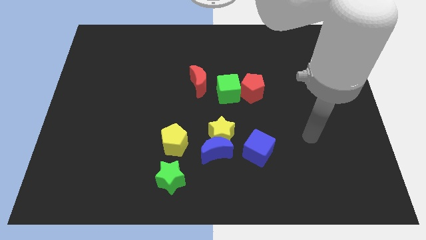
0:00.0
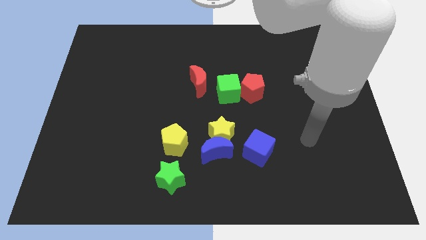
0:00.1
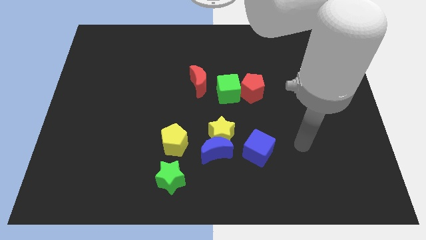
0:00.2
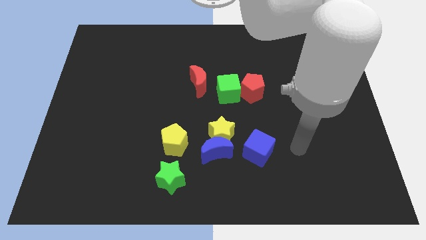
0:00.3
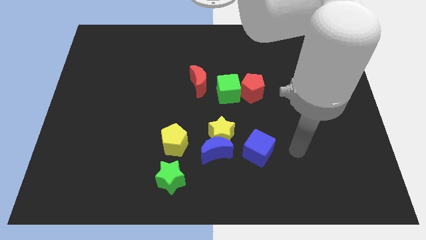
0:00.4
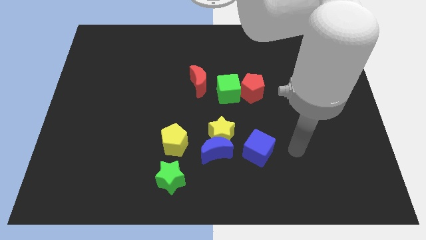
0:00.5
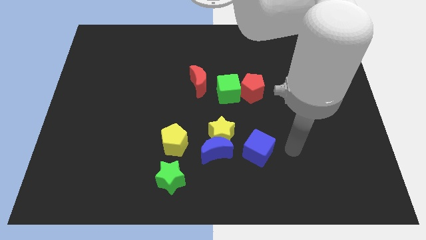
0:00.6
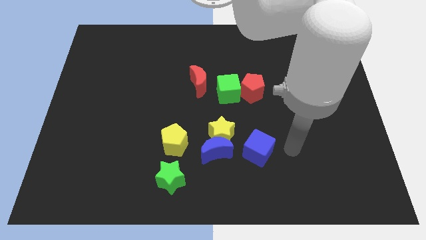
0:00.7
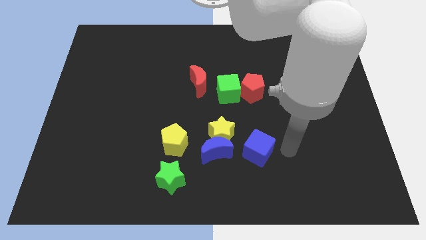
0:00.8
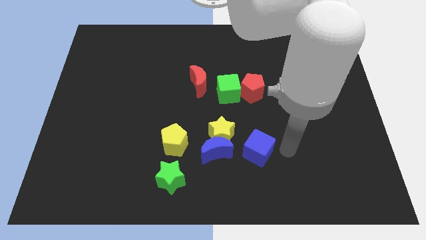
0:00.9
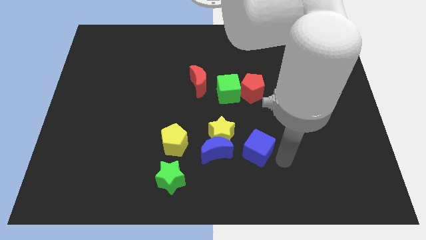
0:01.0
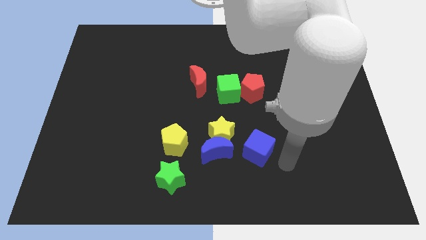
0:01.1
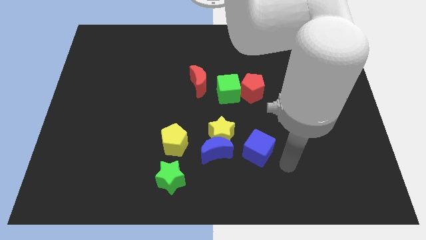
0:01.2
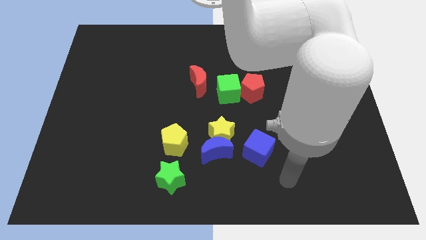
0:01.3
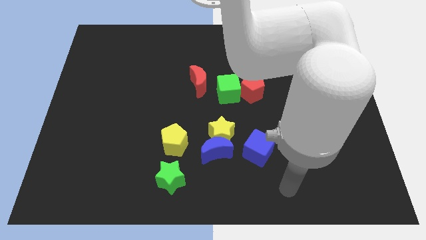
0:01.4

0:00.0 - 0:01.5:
move the arm towards the bottom of the board

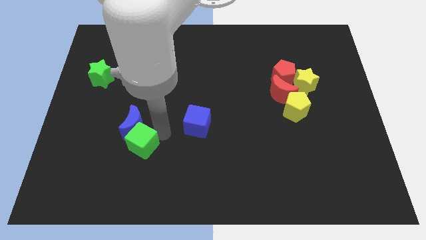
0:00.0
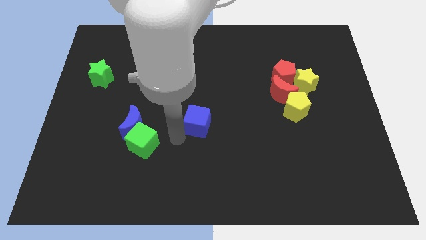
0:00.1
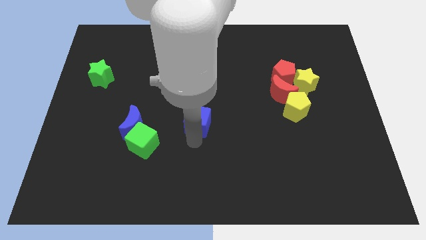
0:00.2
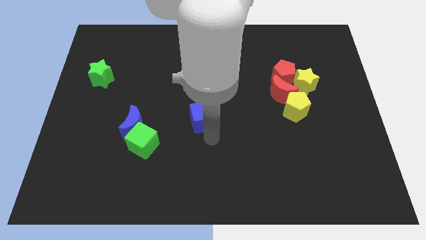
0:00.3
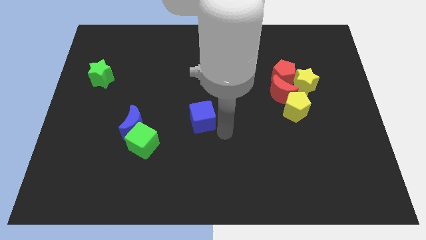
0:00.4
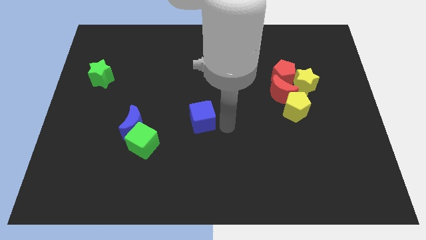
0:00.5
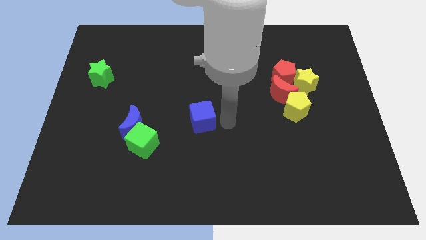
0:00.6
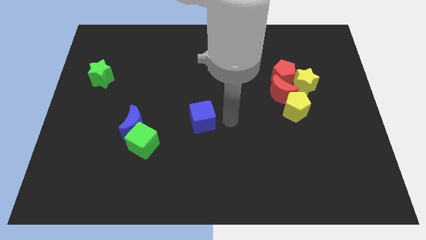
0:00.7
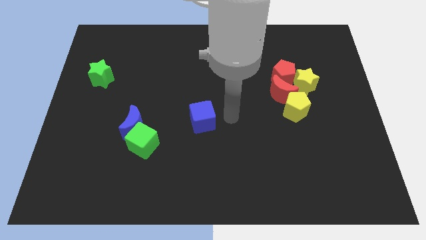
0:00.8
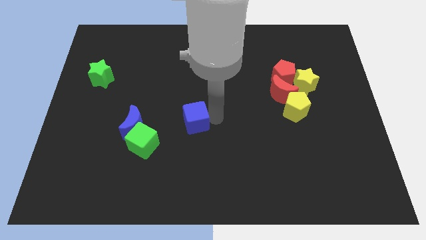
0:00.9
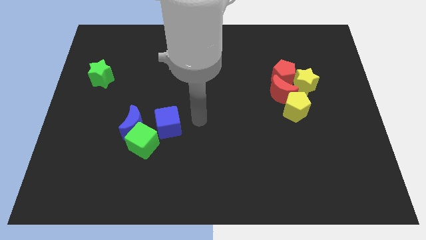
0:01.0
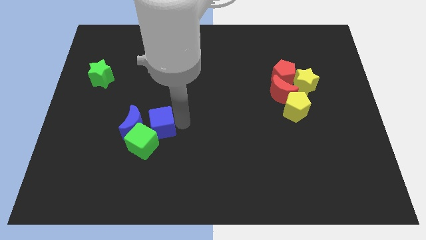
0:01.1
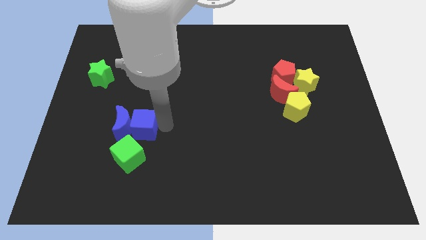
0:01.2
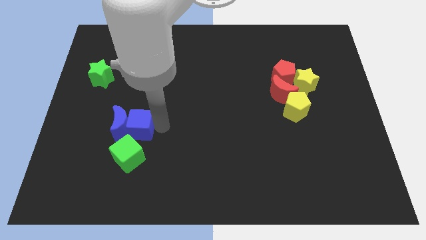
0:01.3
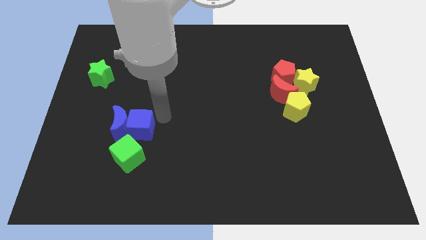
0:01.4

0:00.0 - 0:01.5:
move the blue cube into the blue moon

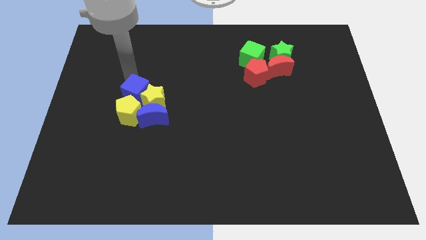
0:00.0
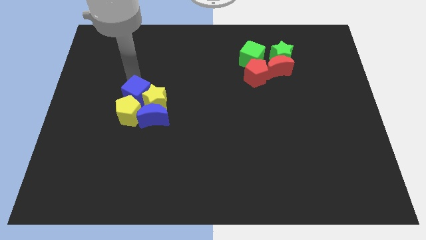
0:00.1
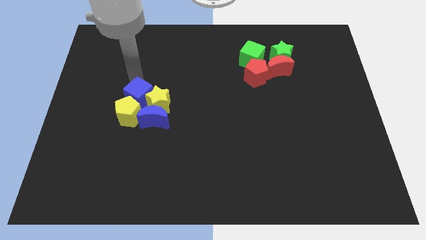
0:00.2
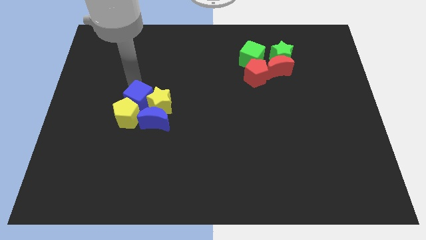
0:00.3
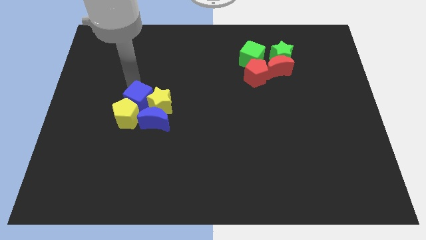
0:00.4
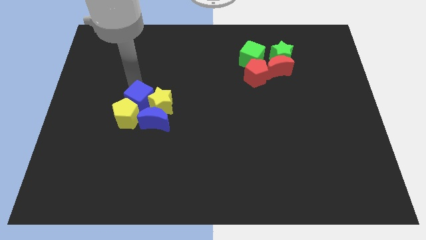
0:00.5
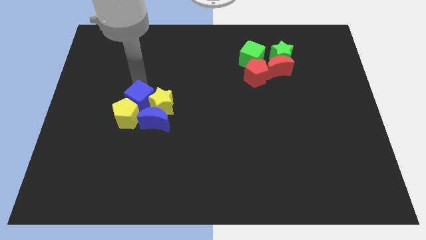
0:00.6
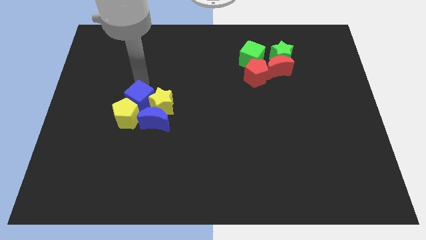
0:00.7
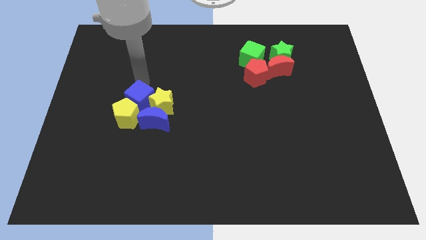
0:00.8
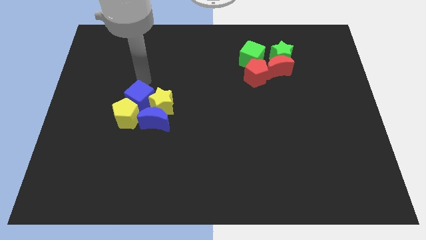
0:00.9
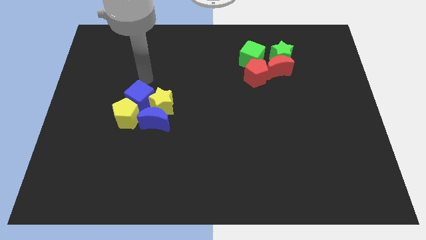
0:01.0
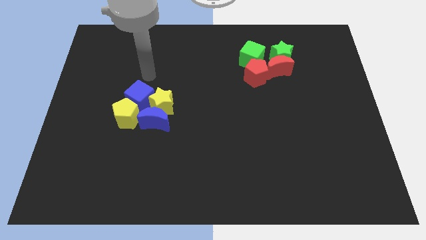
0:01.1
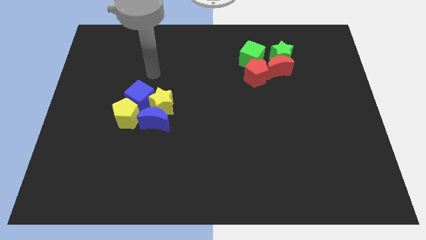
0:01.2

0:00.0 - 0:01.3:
move blue cube into group of blocks

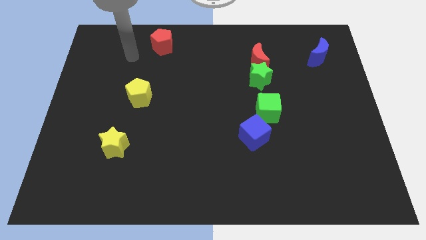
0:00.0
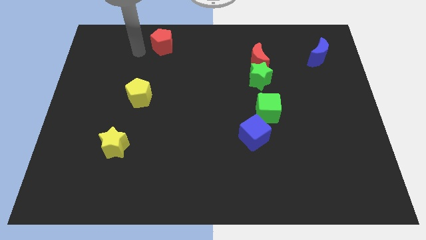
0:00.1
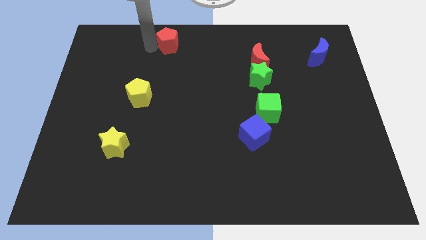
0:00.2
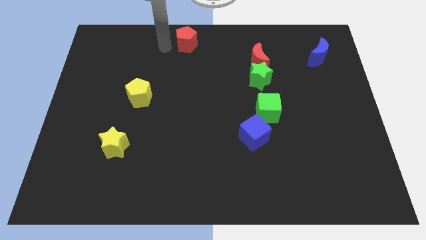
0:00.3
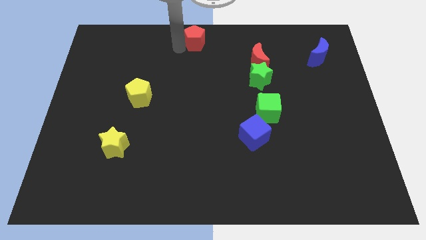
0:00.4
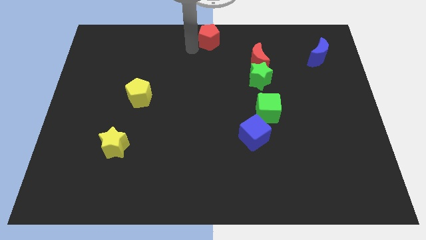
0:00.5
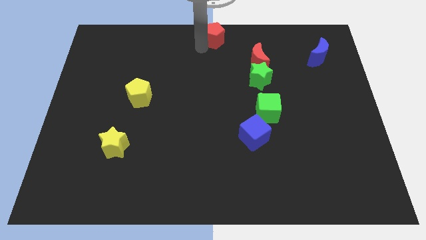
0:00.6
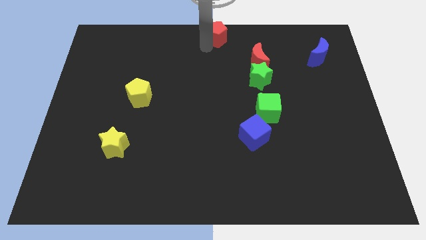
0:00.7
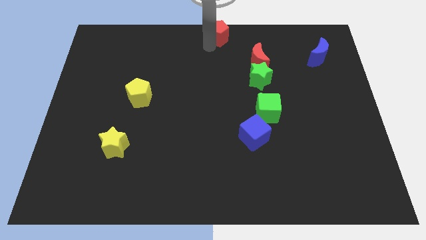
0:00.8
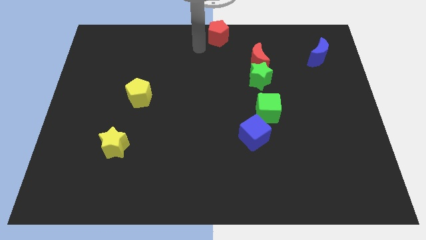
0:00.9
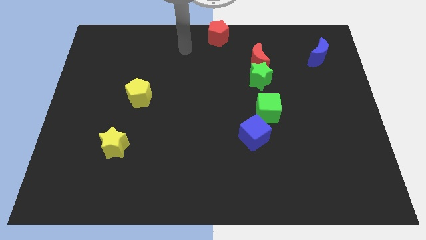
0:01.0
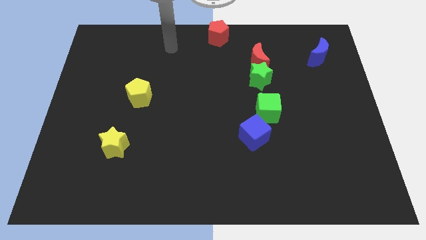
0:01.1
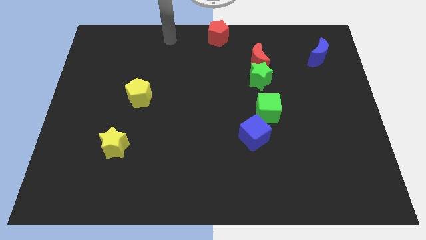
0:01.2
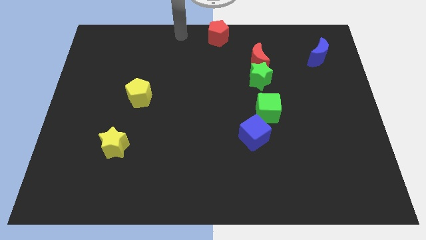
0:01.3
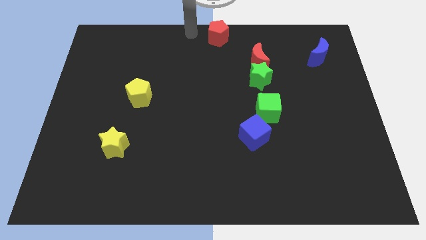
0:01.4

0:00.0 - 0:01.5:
push the red pentagon to the top center

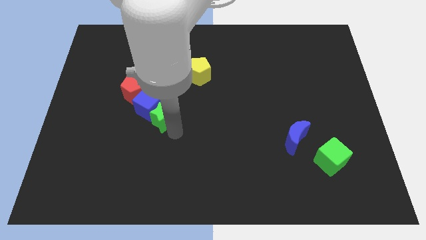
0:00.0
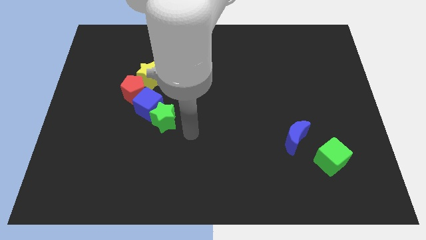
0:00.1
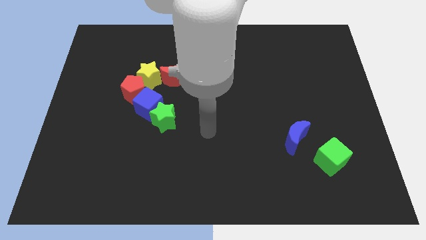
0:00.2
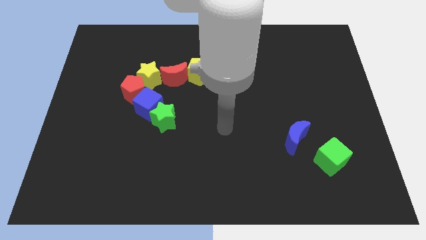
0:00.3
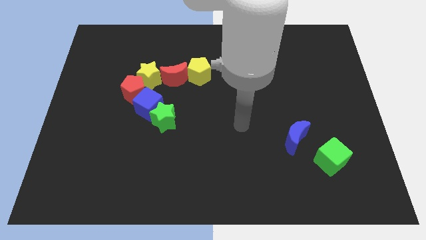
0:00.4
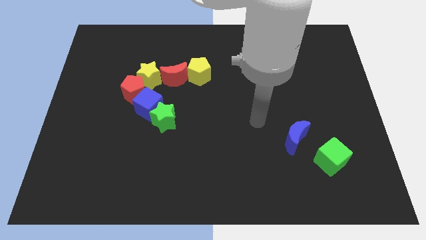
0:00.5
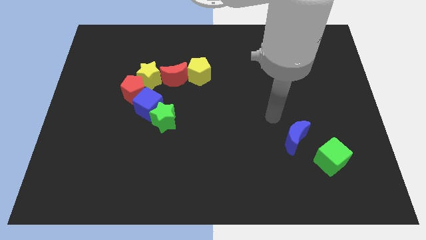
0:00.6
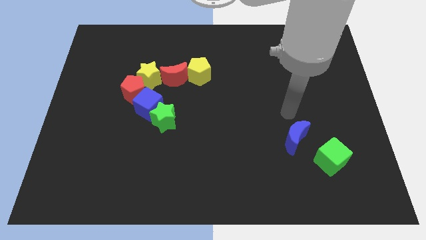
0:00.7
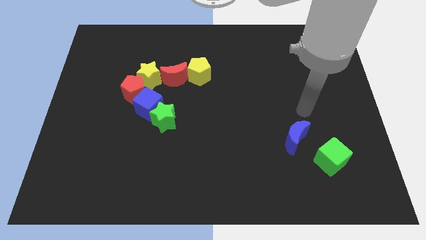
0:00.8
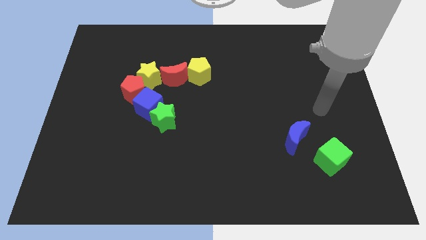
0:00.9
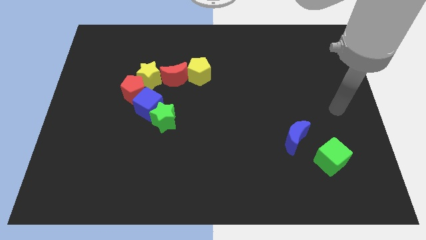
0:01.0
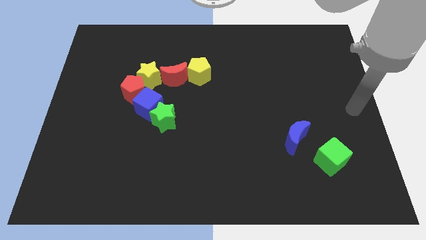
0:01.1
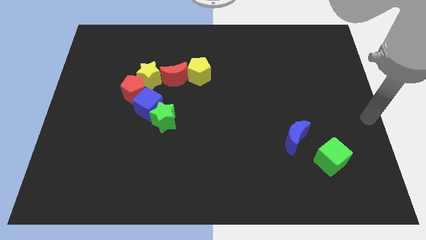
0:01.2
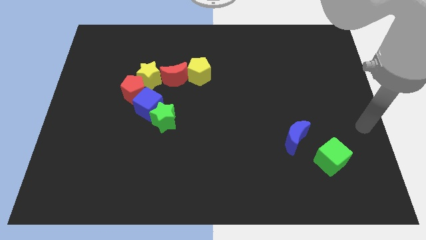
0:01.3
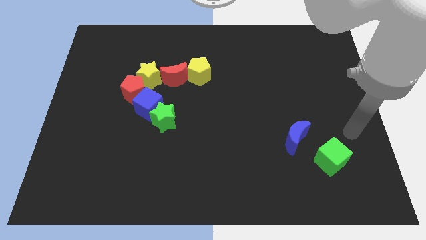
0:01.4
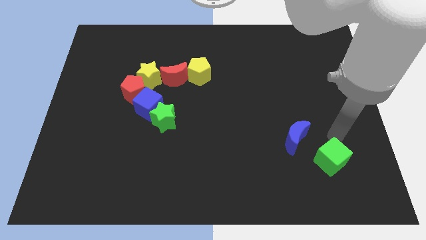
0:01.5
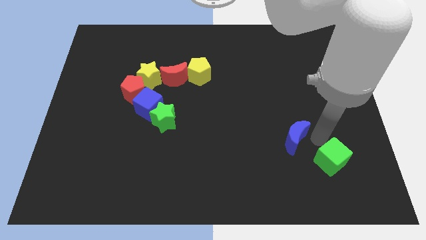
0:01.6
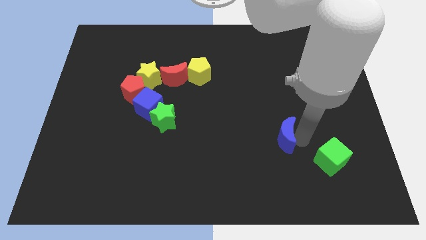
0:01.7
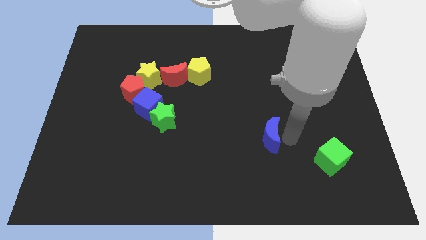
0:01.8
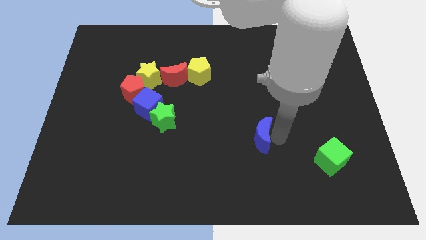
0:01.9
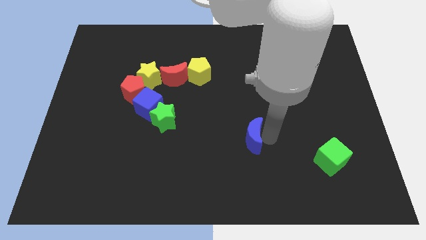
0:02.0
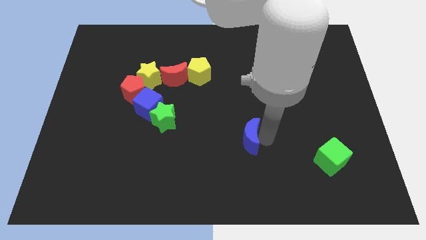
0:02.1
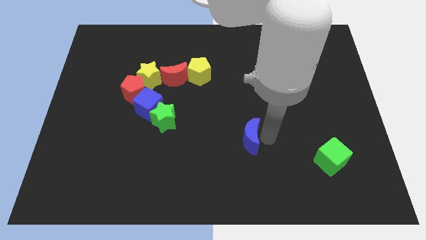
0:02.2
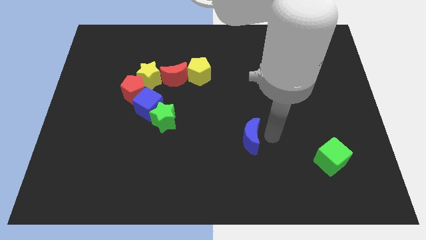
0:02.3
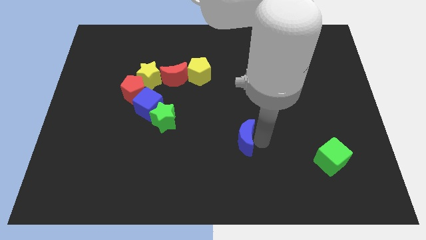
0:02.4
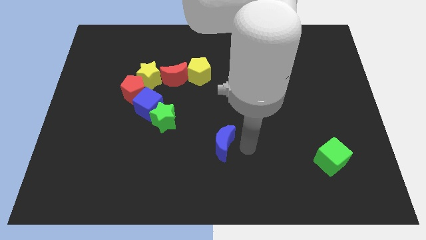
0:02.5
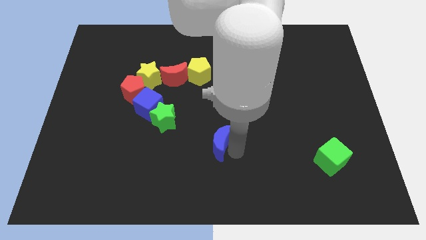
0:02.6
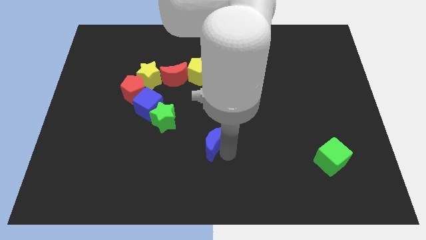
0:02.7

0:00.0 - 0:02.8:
move the blue crescent to the bottom right of the green star

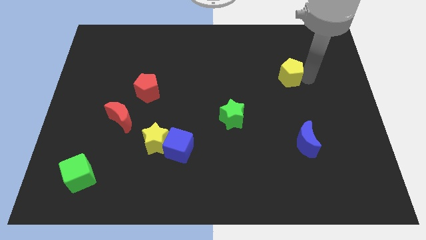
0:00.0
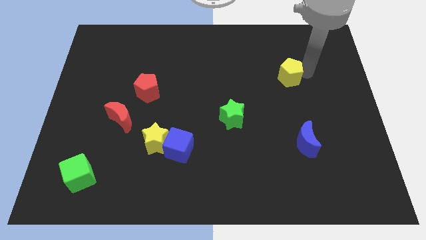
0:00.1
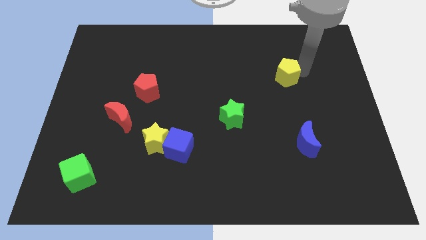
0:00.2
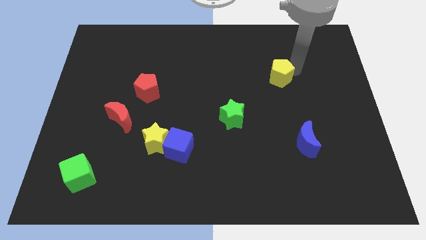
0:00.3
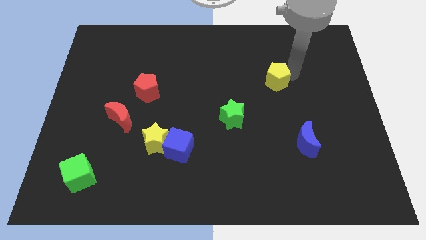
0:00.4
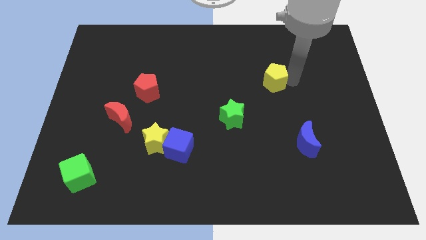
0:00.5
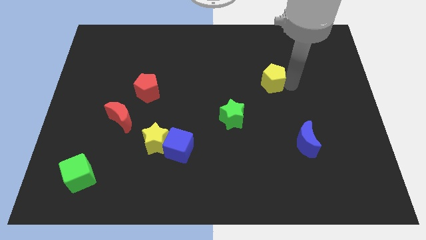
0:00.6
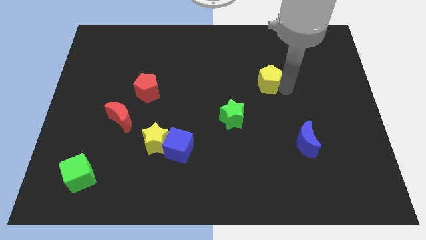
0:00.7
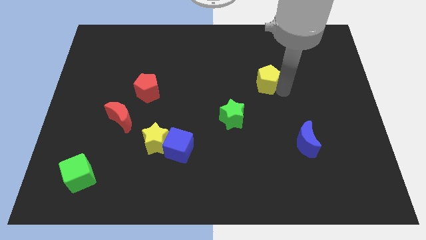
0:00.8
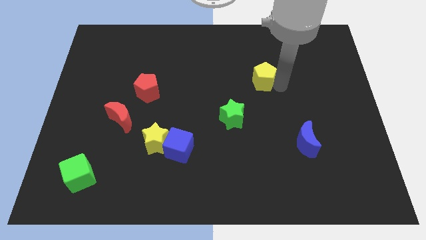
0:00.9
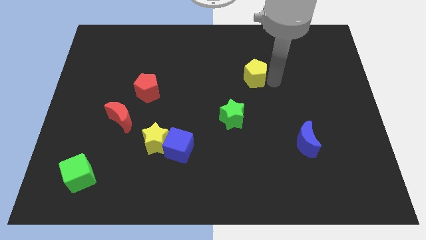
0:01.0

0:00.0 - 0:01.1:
move the yellow pentagon towards the green star
